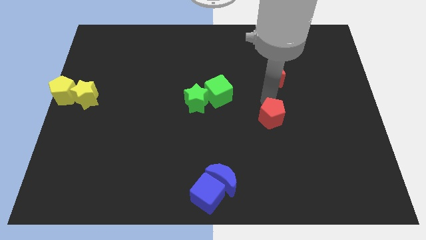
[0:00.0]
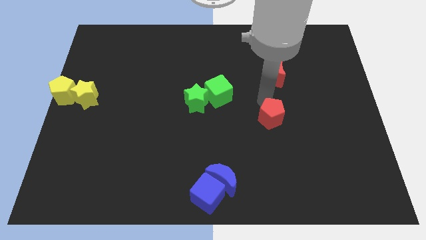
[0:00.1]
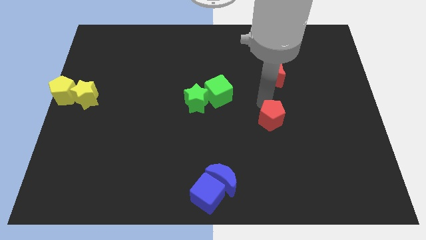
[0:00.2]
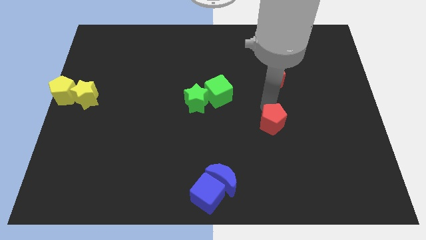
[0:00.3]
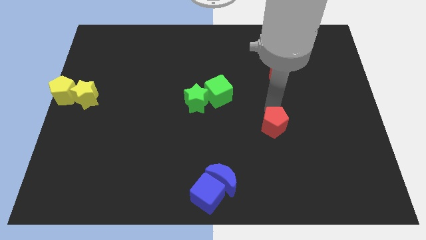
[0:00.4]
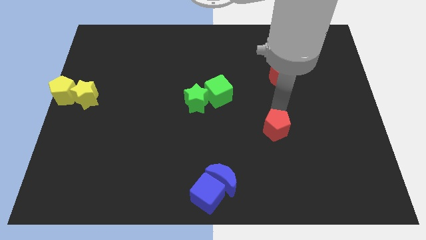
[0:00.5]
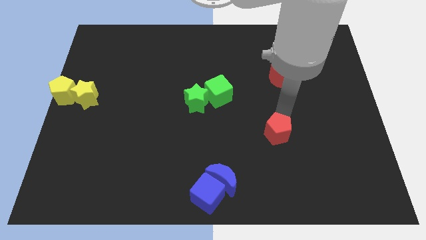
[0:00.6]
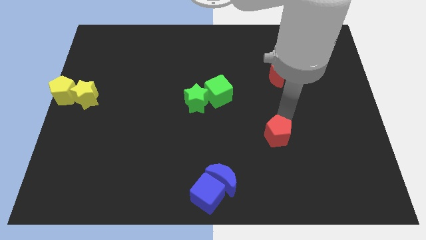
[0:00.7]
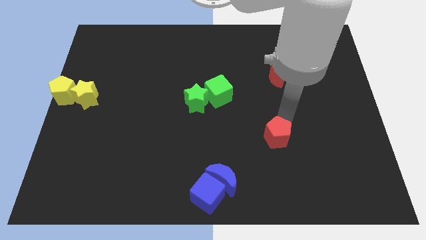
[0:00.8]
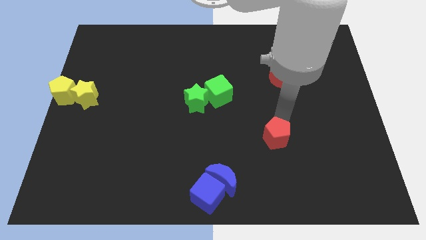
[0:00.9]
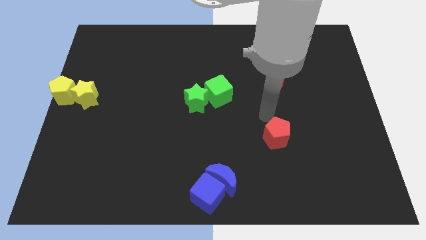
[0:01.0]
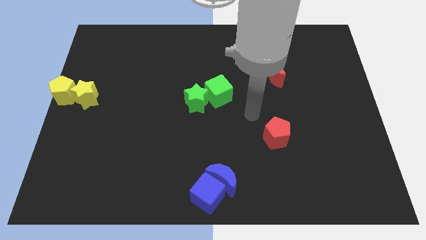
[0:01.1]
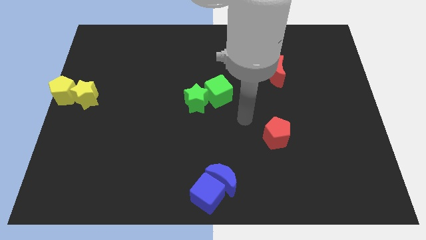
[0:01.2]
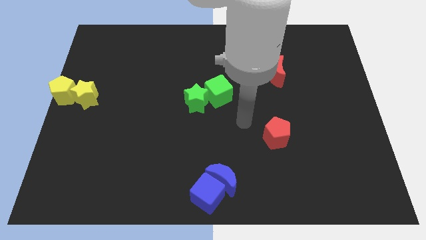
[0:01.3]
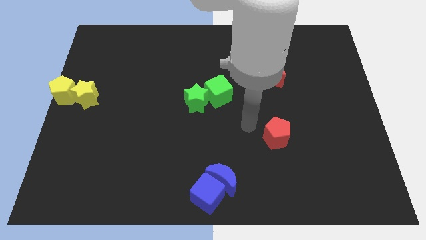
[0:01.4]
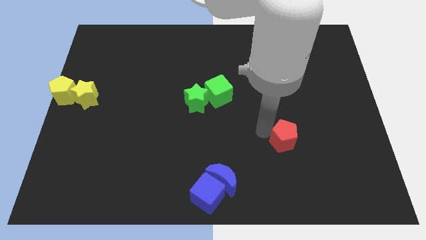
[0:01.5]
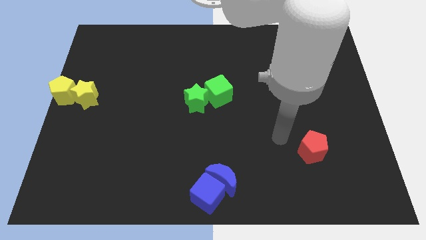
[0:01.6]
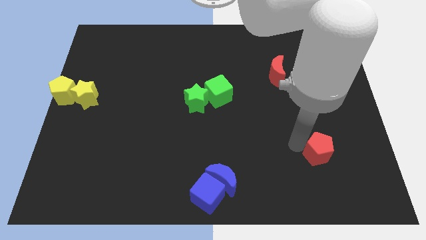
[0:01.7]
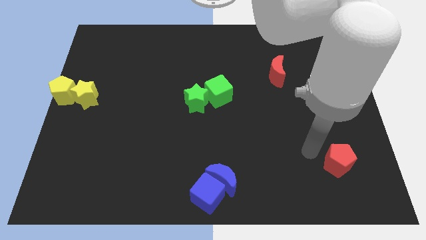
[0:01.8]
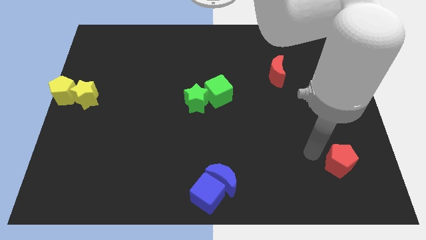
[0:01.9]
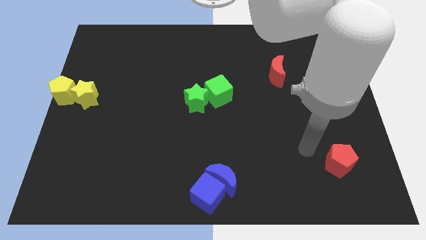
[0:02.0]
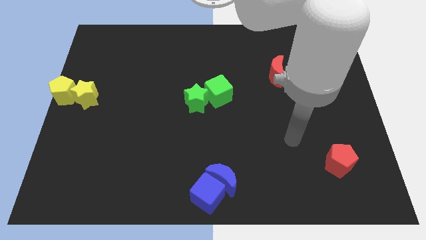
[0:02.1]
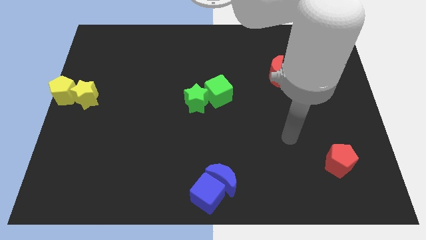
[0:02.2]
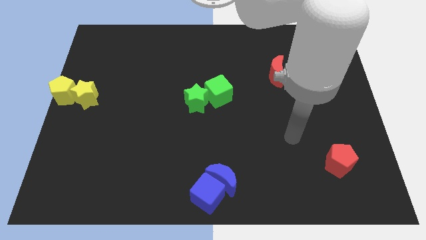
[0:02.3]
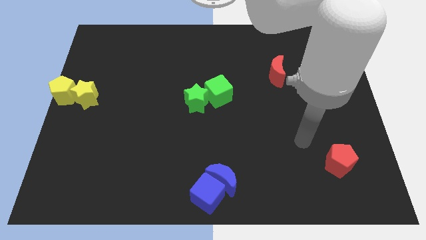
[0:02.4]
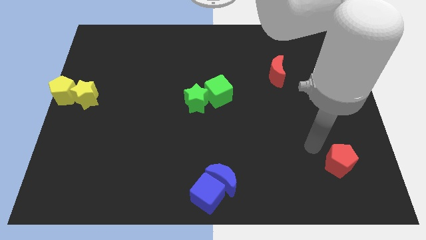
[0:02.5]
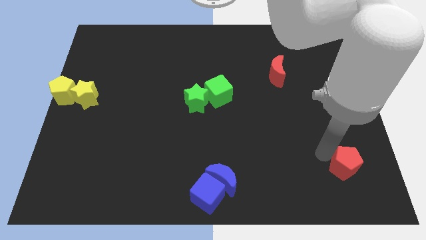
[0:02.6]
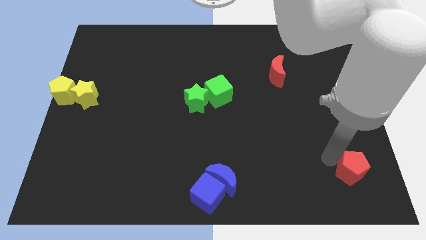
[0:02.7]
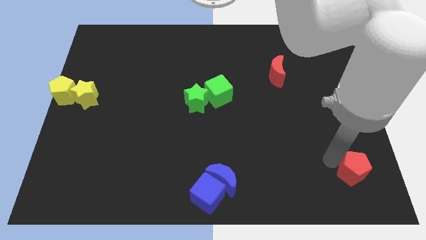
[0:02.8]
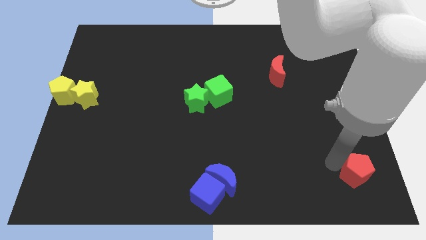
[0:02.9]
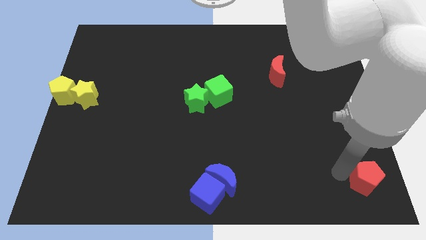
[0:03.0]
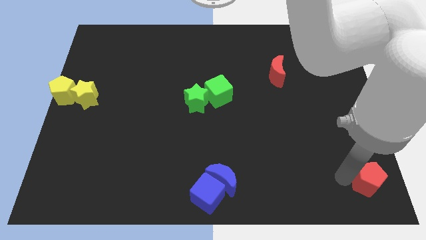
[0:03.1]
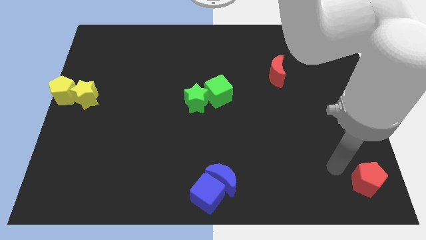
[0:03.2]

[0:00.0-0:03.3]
move the red pentagon towards the bottom right side

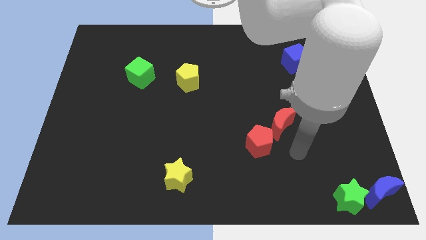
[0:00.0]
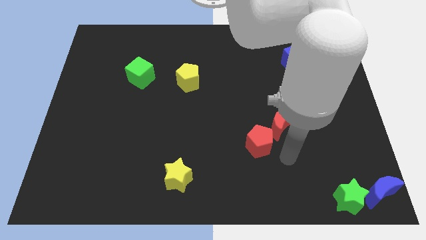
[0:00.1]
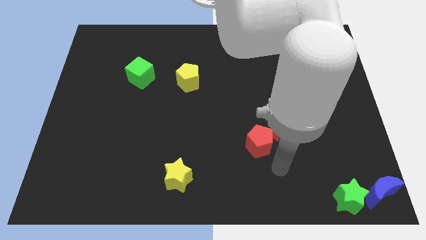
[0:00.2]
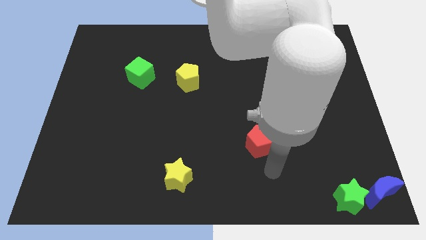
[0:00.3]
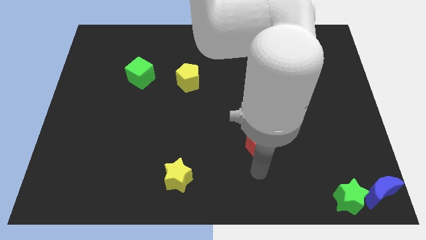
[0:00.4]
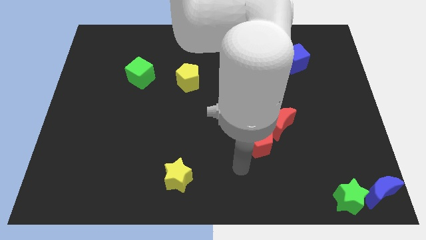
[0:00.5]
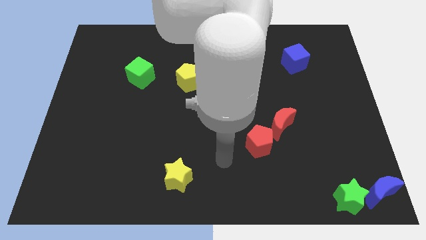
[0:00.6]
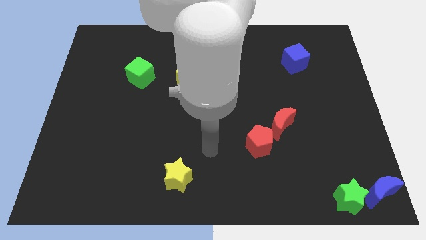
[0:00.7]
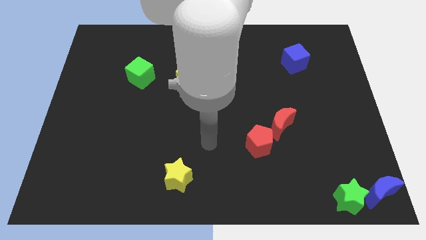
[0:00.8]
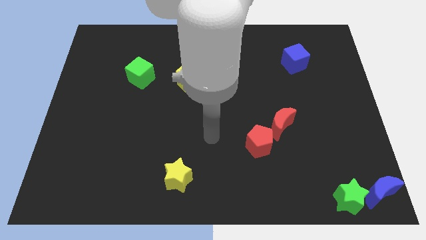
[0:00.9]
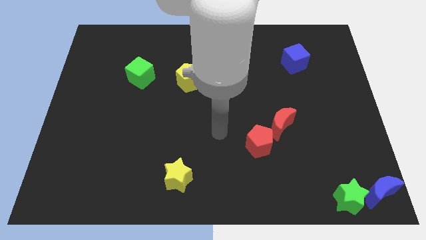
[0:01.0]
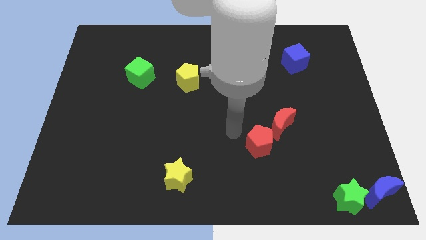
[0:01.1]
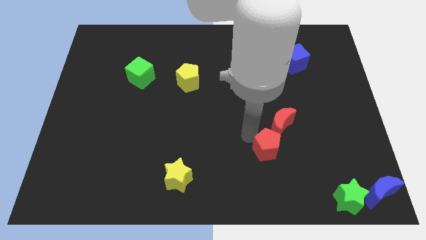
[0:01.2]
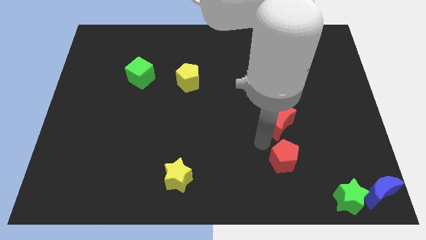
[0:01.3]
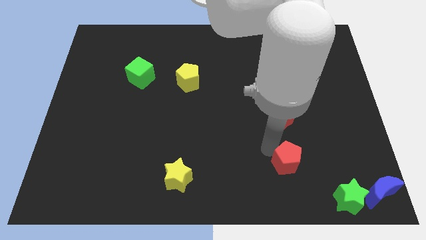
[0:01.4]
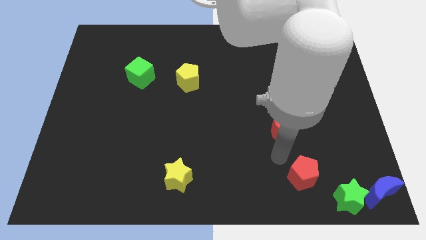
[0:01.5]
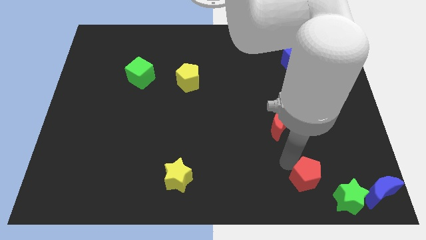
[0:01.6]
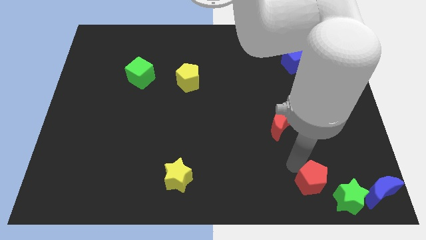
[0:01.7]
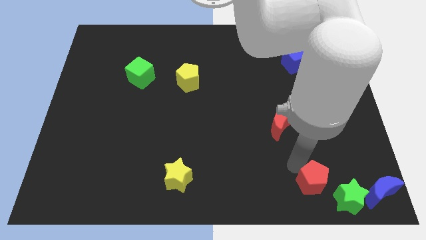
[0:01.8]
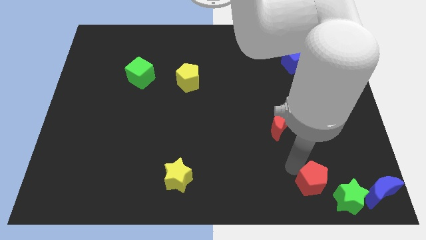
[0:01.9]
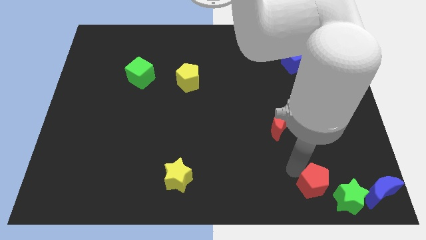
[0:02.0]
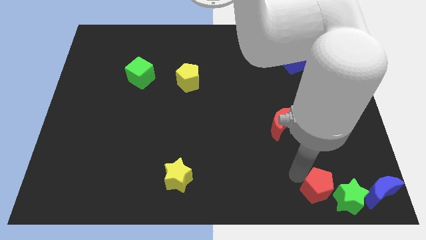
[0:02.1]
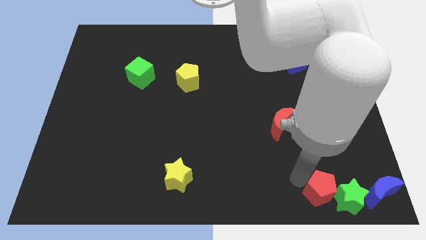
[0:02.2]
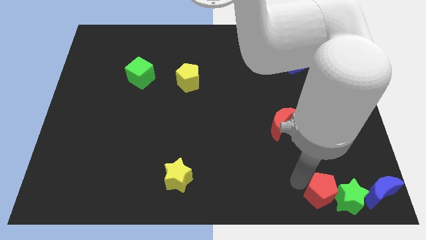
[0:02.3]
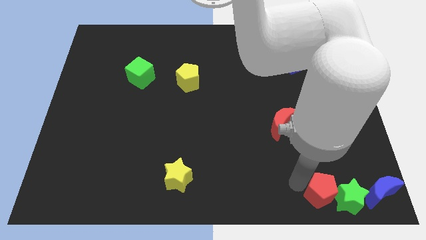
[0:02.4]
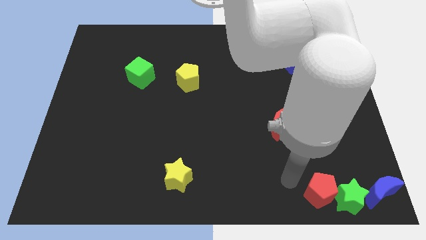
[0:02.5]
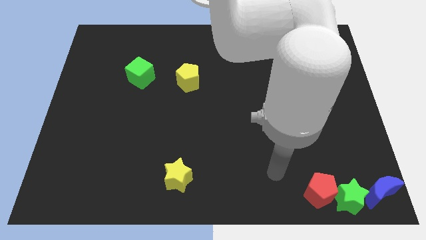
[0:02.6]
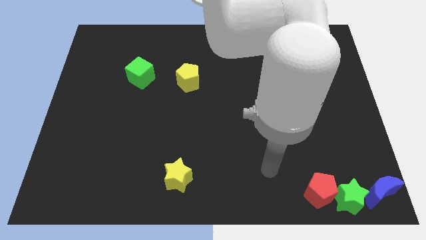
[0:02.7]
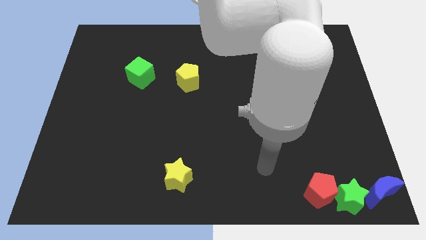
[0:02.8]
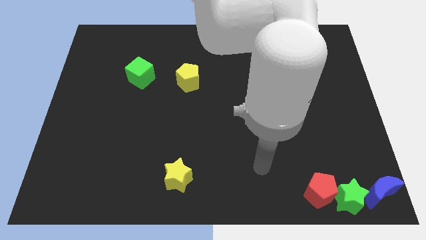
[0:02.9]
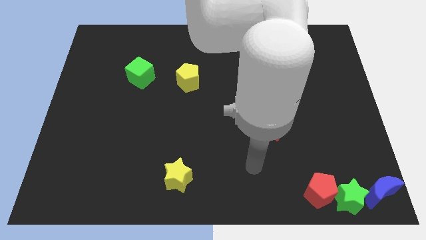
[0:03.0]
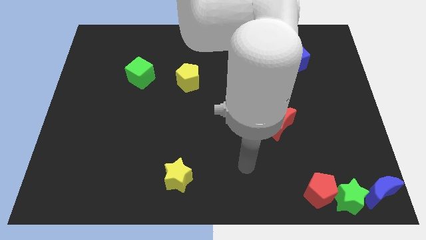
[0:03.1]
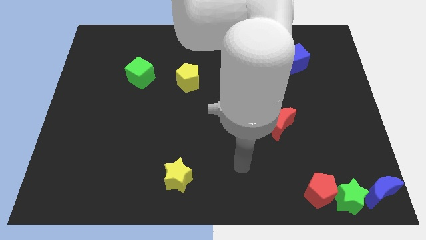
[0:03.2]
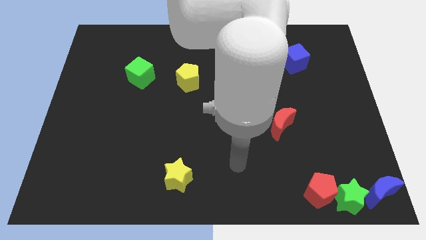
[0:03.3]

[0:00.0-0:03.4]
put the red pentagon at the top left of the green star

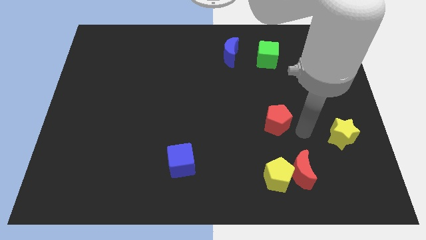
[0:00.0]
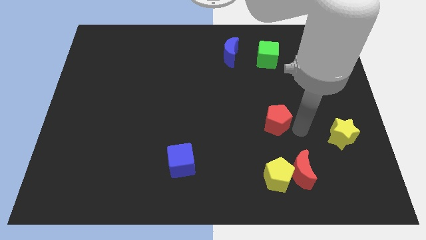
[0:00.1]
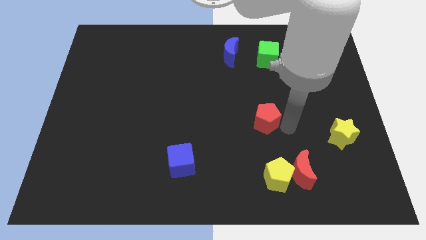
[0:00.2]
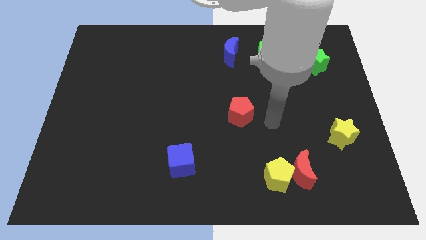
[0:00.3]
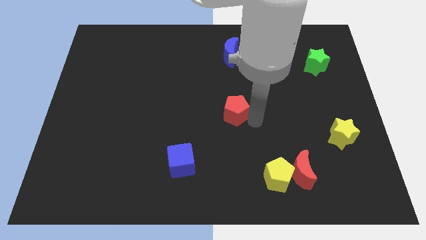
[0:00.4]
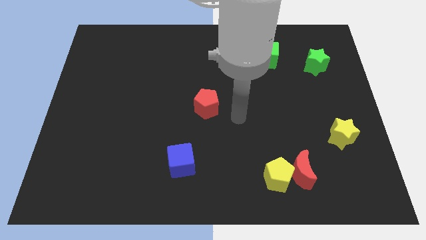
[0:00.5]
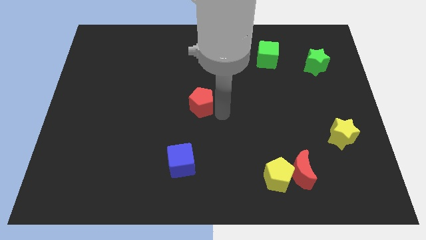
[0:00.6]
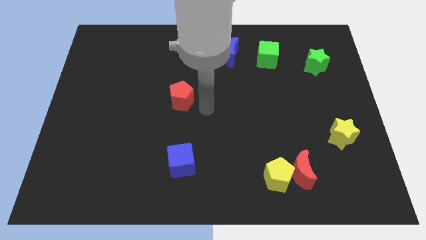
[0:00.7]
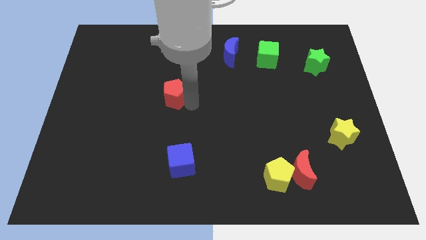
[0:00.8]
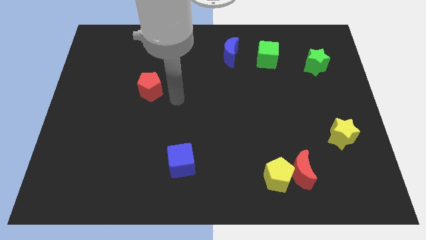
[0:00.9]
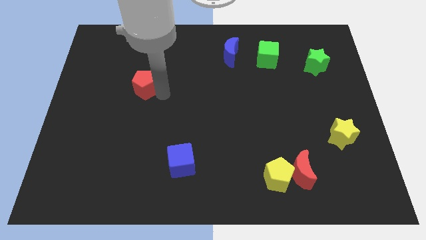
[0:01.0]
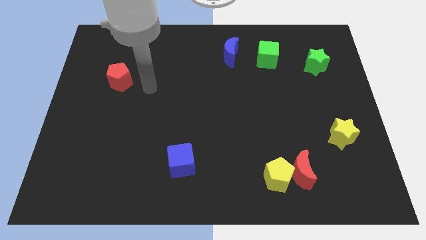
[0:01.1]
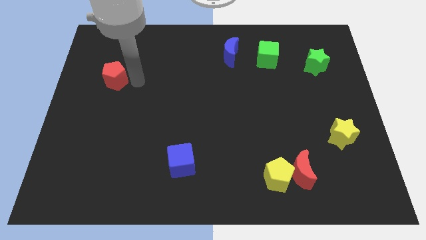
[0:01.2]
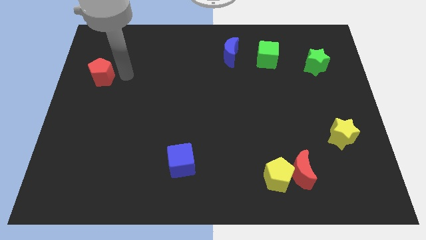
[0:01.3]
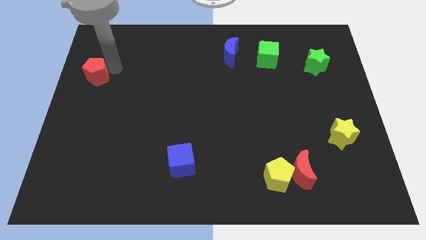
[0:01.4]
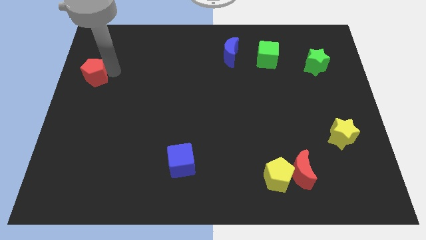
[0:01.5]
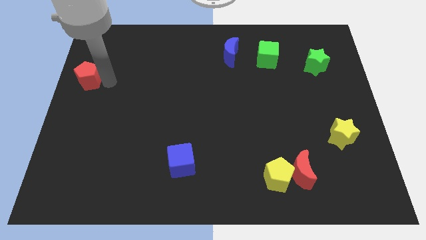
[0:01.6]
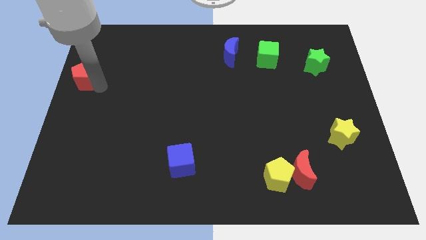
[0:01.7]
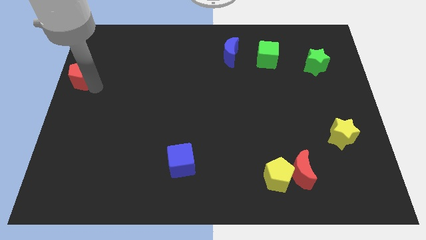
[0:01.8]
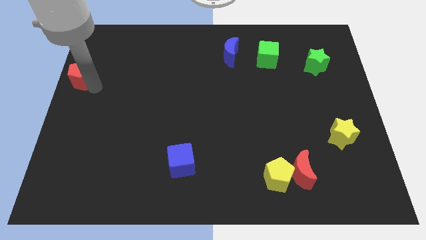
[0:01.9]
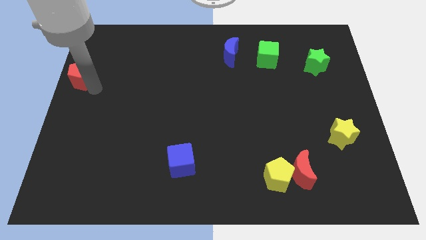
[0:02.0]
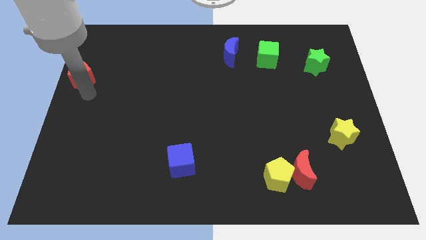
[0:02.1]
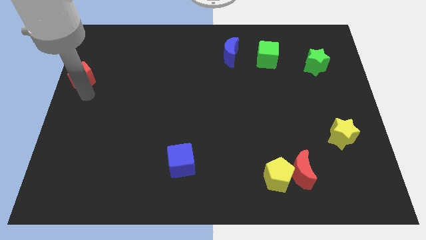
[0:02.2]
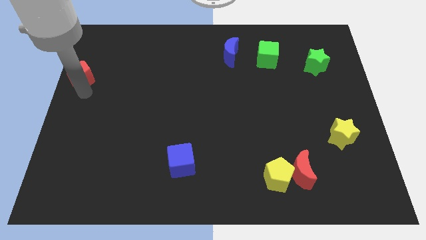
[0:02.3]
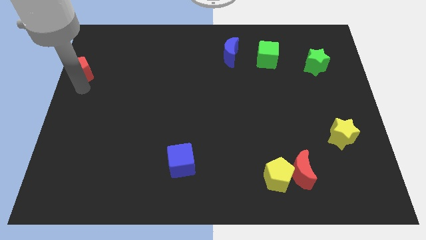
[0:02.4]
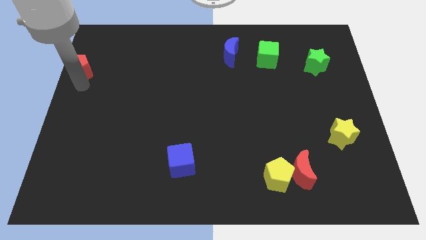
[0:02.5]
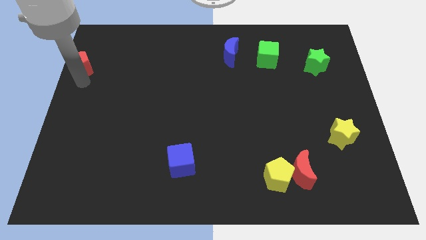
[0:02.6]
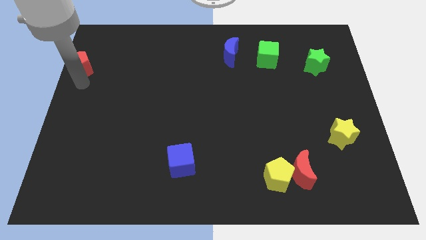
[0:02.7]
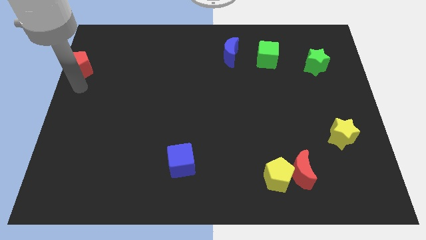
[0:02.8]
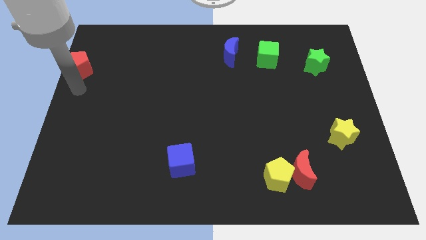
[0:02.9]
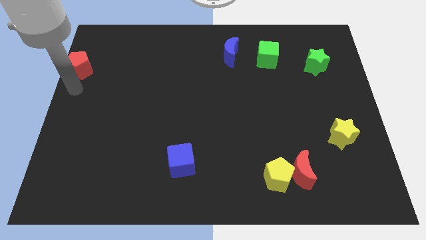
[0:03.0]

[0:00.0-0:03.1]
move the red pentagon towards the top left
